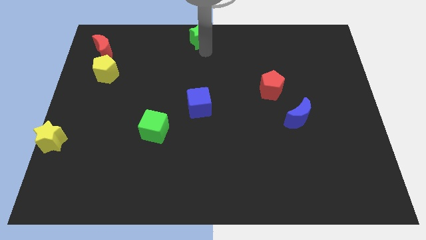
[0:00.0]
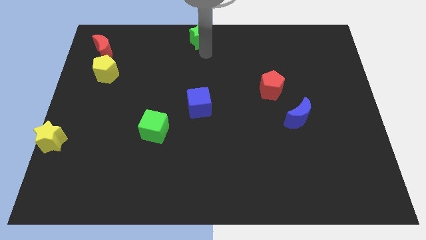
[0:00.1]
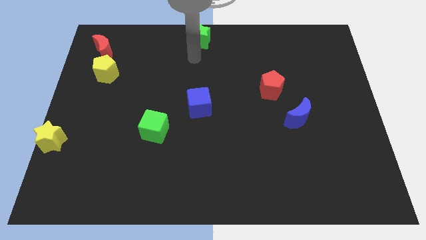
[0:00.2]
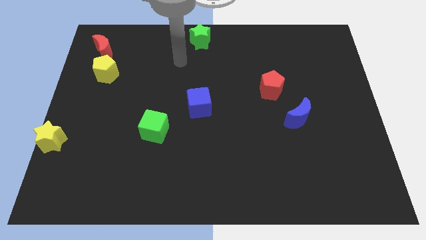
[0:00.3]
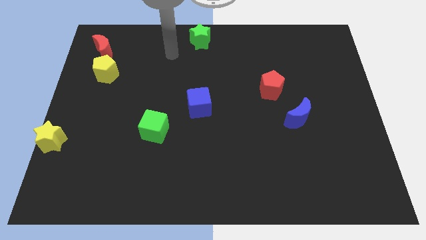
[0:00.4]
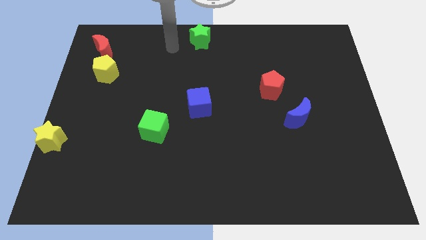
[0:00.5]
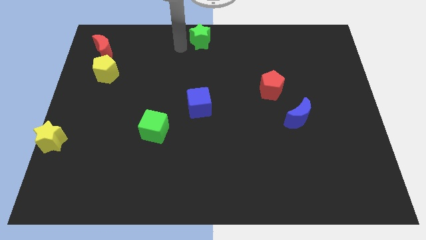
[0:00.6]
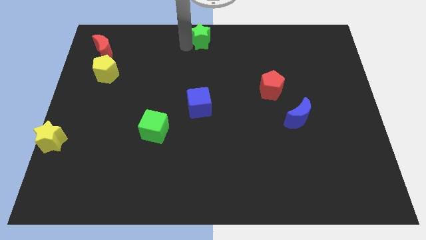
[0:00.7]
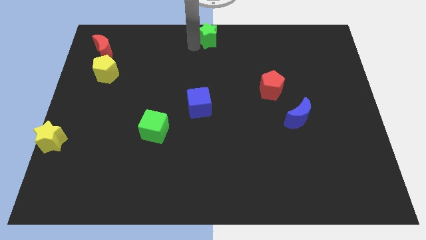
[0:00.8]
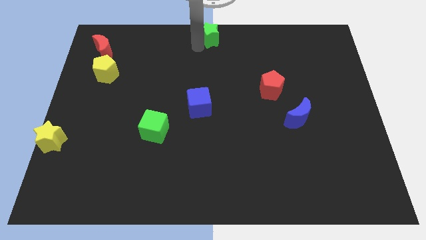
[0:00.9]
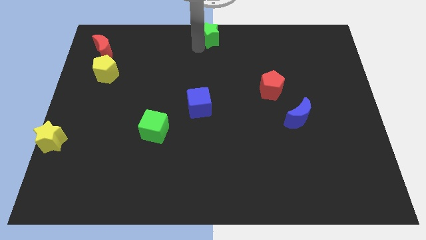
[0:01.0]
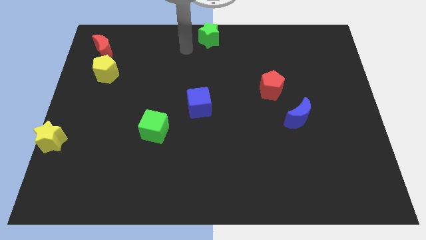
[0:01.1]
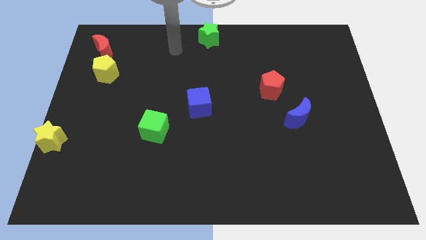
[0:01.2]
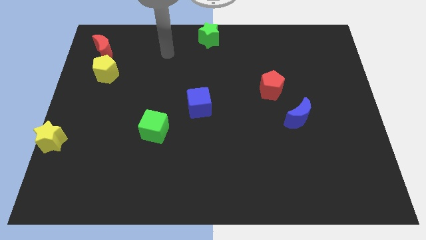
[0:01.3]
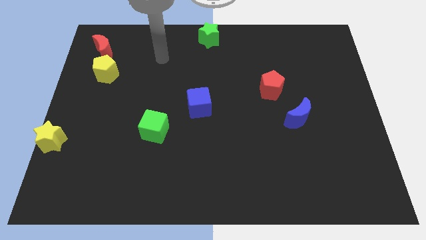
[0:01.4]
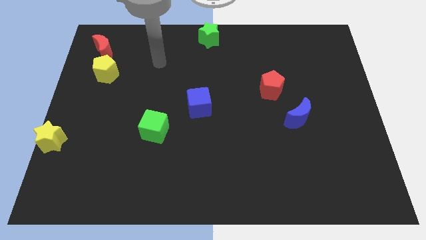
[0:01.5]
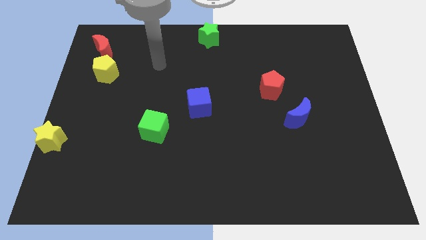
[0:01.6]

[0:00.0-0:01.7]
push the green star slightly to the right side of the board

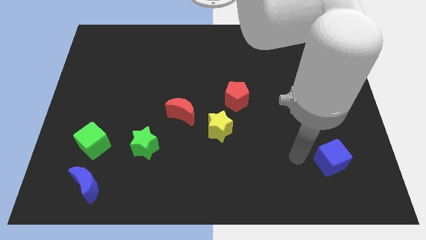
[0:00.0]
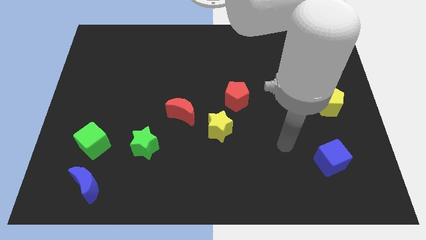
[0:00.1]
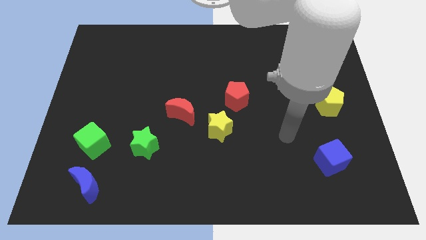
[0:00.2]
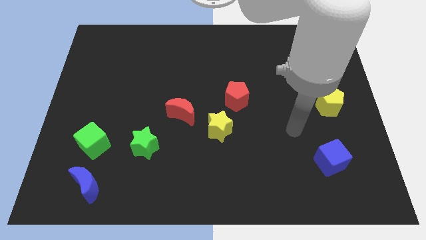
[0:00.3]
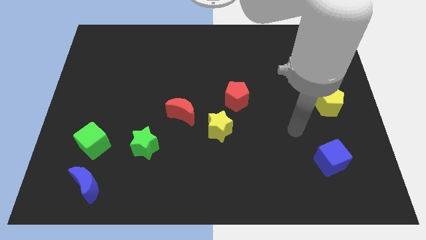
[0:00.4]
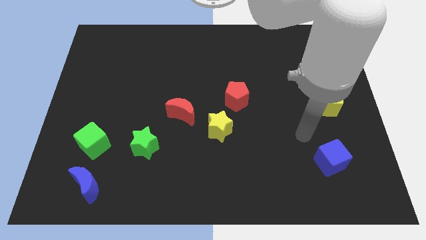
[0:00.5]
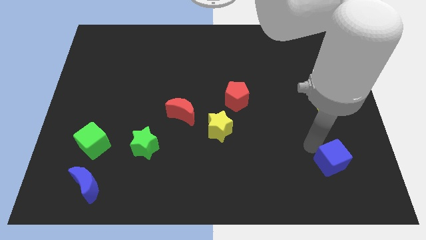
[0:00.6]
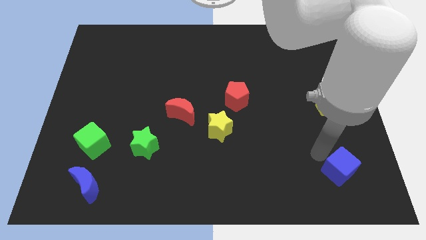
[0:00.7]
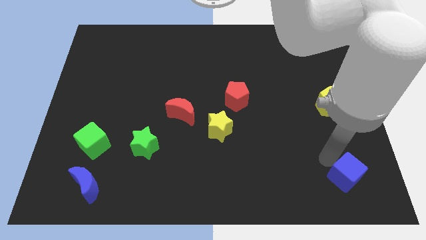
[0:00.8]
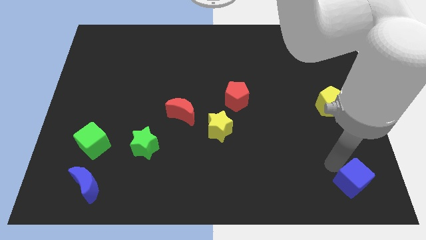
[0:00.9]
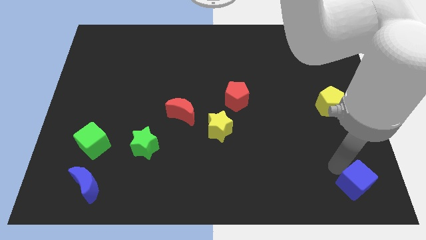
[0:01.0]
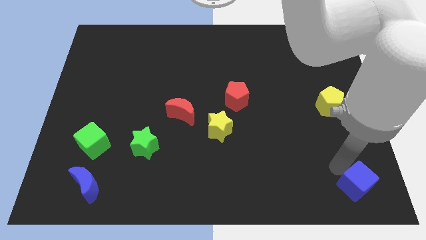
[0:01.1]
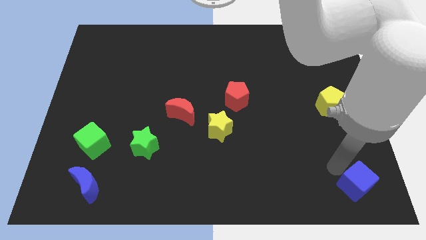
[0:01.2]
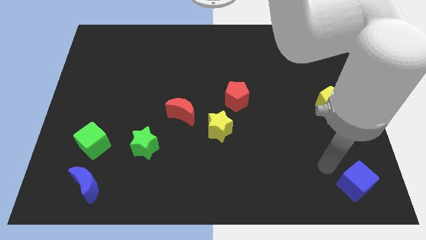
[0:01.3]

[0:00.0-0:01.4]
move the blue cube to bottom right

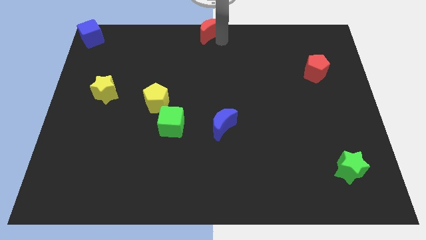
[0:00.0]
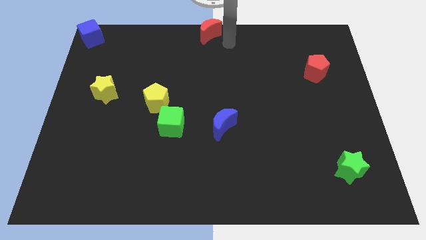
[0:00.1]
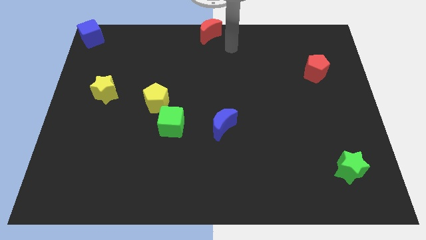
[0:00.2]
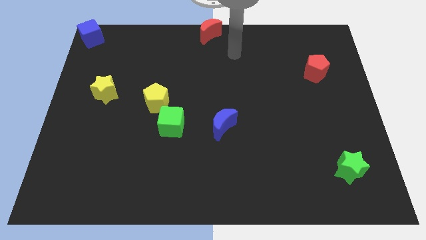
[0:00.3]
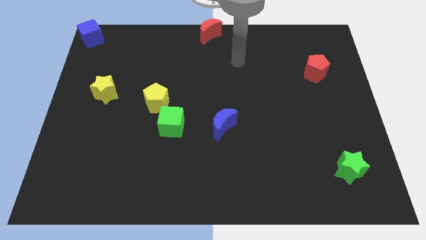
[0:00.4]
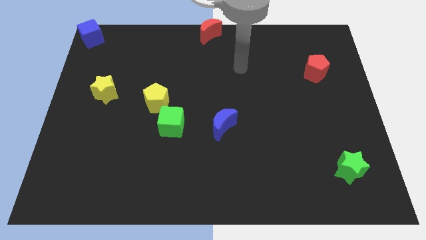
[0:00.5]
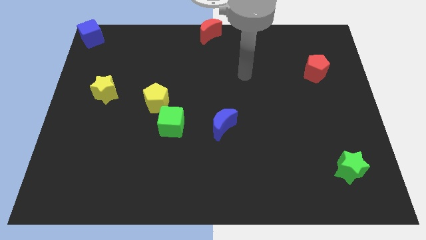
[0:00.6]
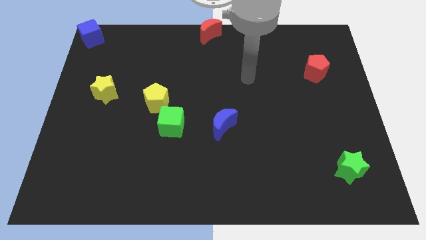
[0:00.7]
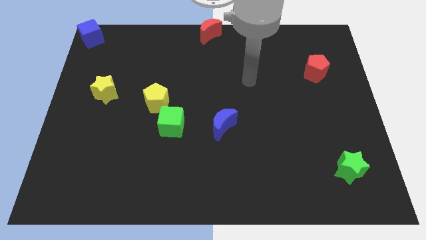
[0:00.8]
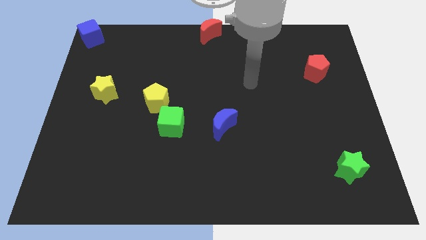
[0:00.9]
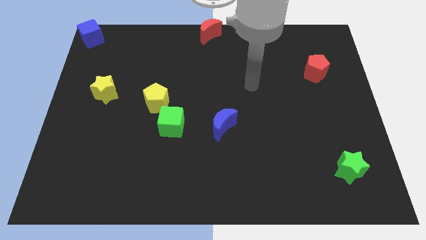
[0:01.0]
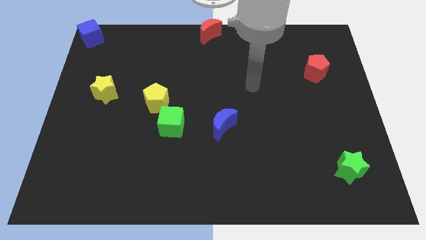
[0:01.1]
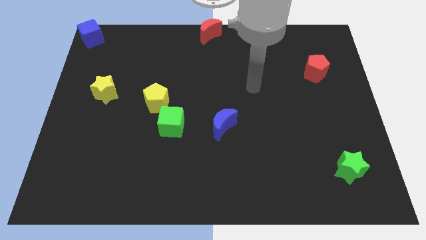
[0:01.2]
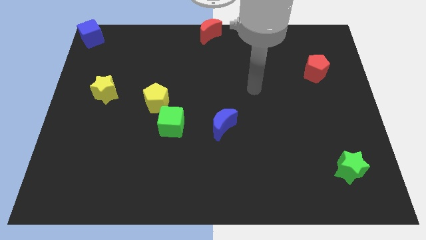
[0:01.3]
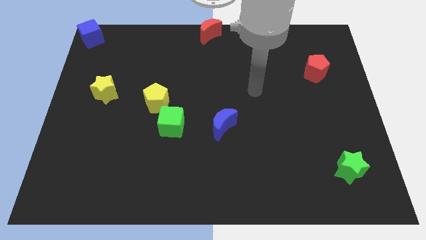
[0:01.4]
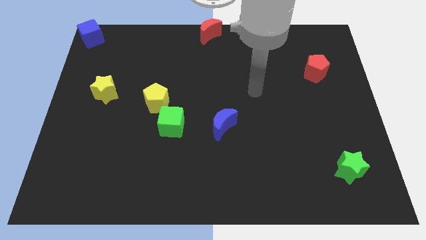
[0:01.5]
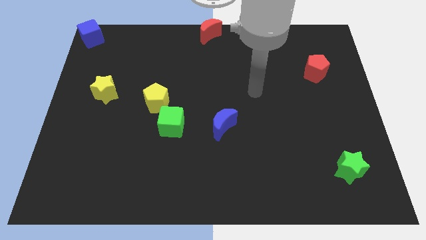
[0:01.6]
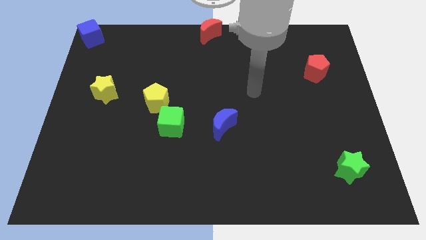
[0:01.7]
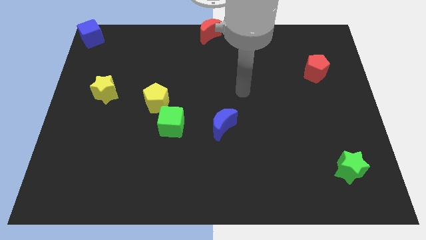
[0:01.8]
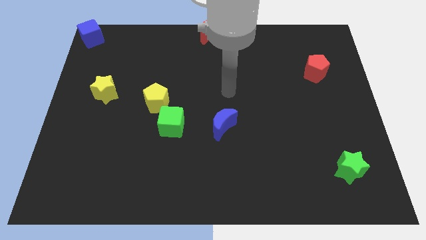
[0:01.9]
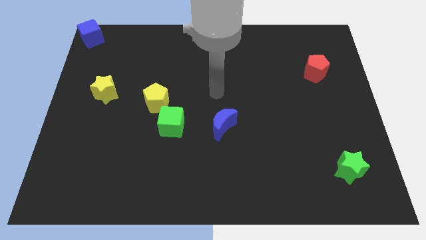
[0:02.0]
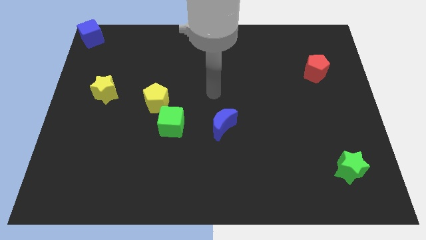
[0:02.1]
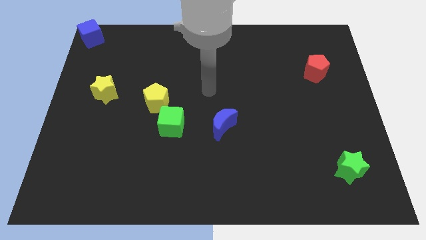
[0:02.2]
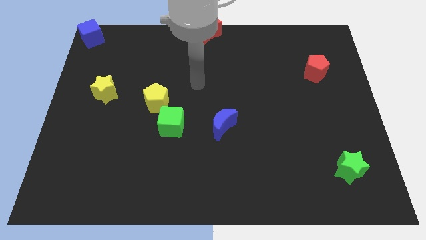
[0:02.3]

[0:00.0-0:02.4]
place your arm at the centre of the board

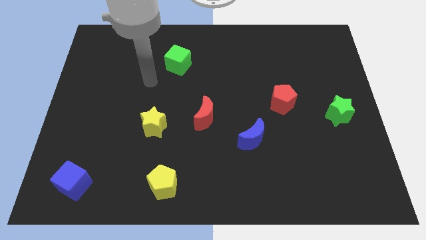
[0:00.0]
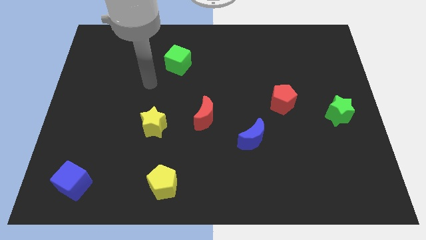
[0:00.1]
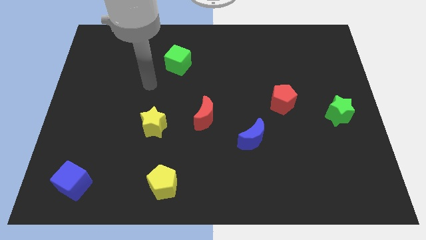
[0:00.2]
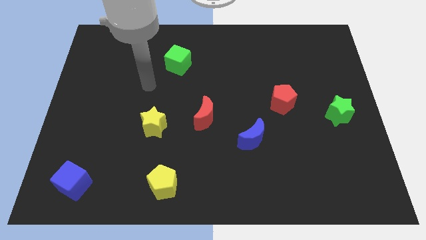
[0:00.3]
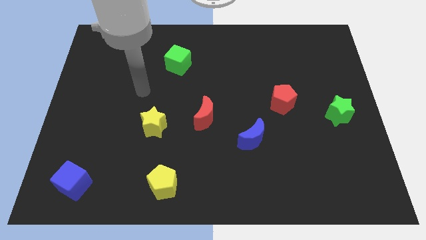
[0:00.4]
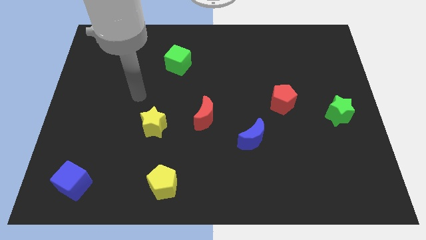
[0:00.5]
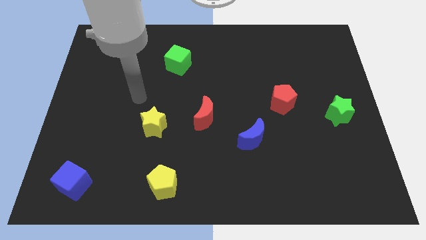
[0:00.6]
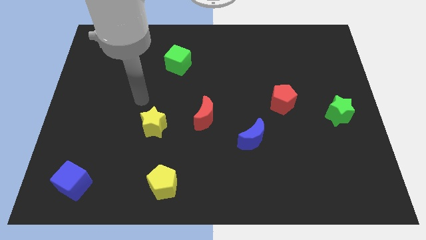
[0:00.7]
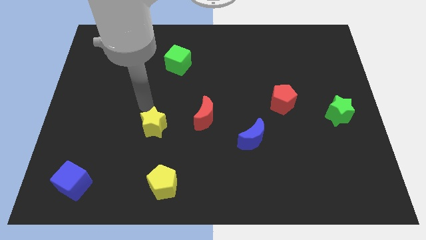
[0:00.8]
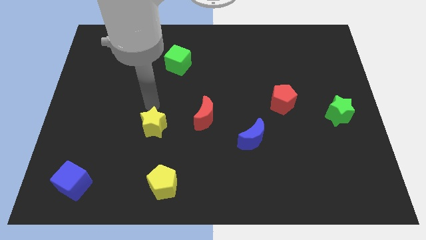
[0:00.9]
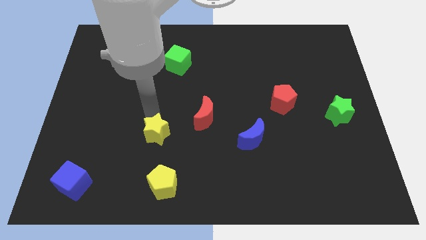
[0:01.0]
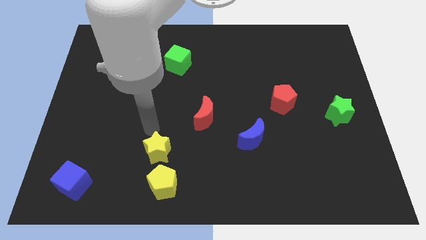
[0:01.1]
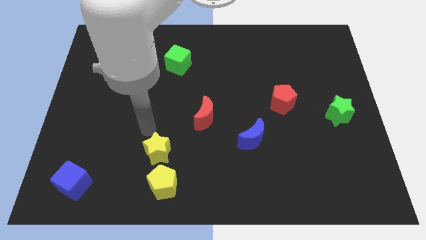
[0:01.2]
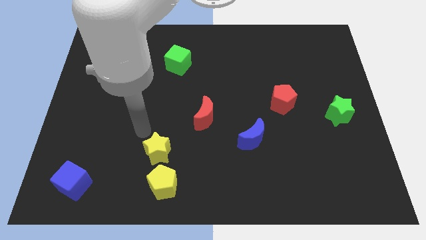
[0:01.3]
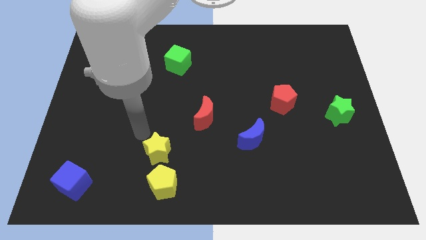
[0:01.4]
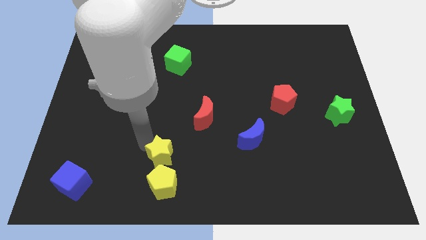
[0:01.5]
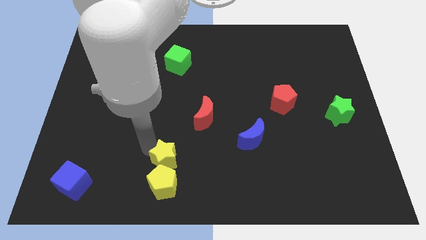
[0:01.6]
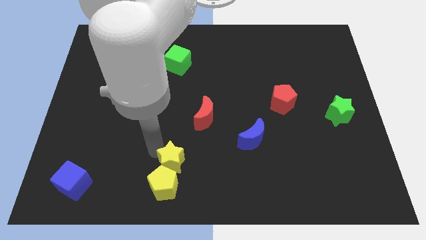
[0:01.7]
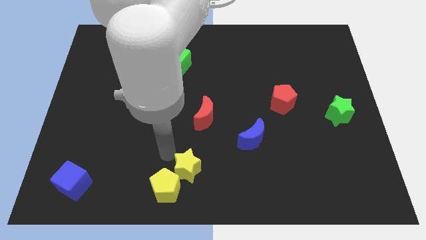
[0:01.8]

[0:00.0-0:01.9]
push the yellow star into the yellow pentagon

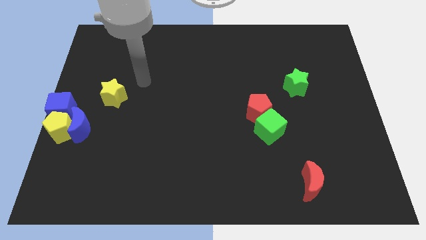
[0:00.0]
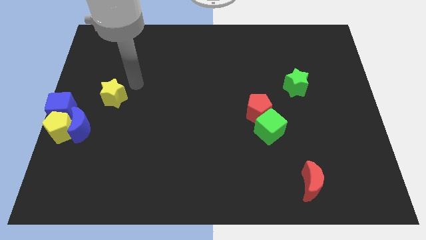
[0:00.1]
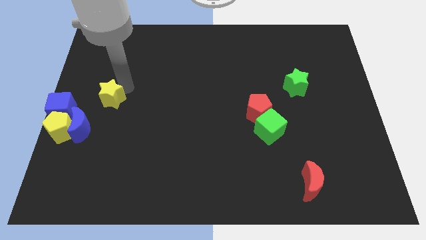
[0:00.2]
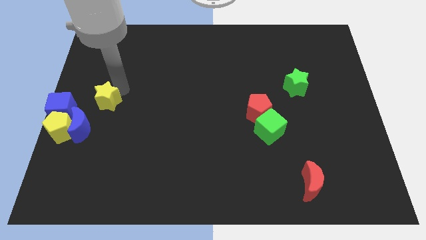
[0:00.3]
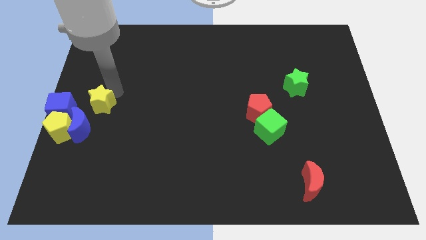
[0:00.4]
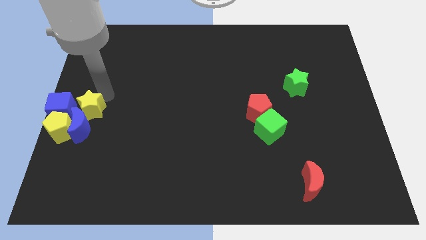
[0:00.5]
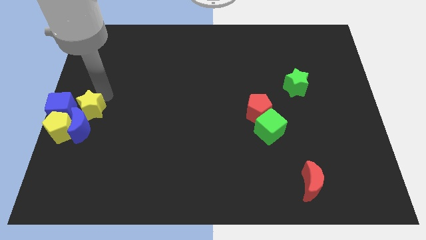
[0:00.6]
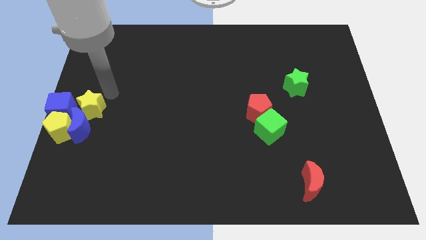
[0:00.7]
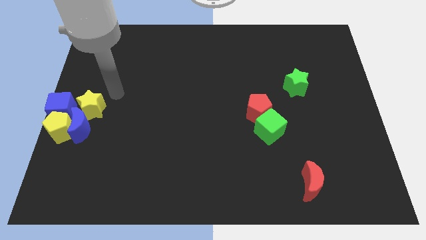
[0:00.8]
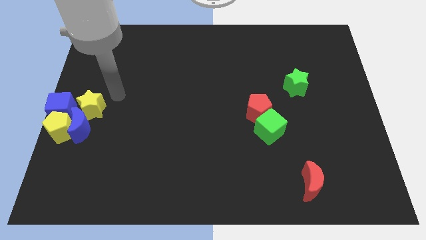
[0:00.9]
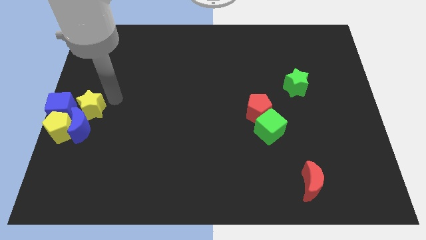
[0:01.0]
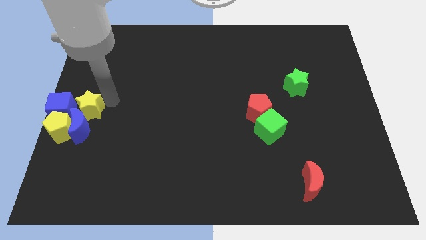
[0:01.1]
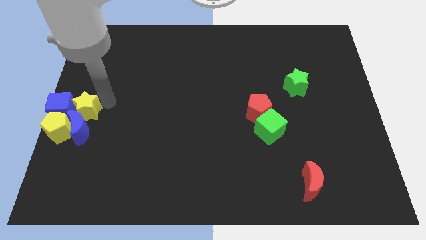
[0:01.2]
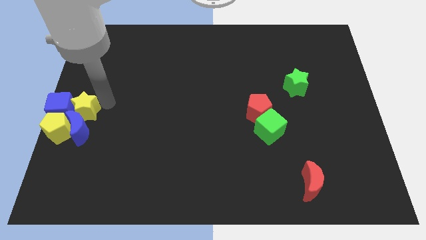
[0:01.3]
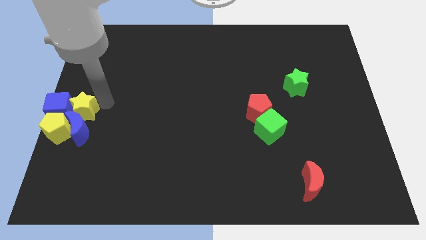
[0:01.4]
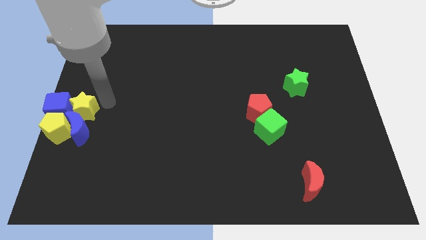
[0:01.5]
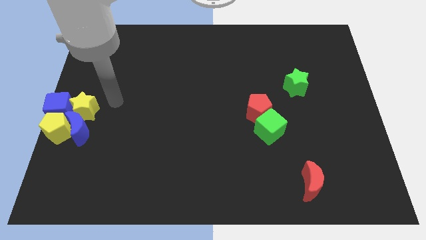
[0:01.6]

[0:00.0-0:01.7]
add the yellow star to the group of blocks at the center left of the board
